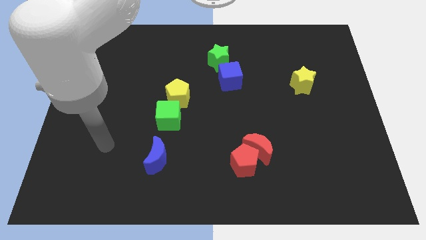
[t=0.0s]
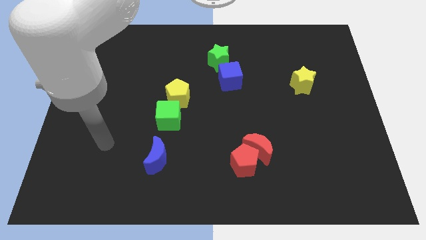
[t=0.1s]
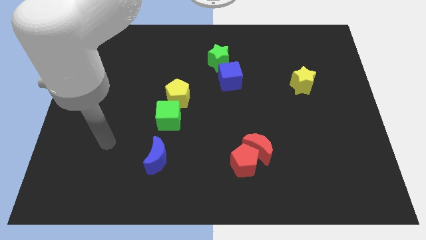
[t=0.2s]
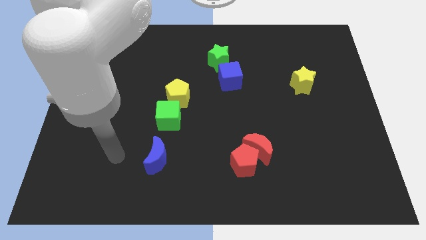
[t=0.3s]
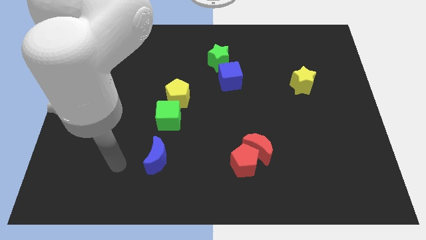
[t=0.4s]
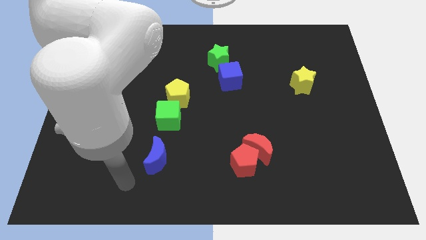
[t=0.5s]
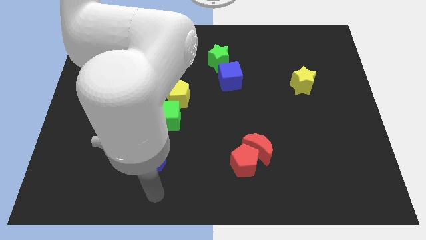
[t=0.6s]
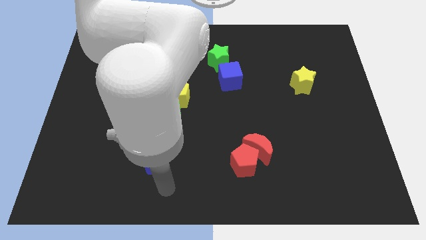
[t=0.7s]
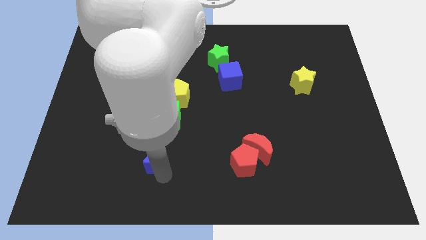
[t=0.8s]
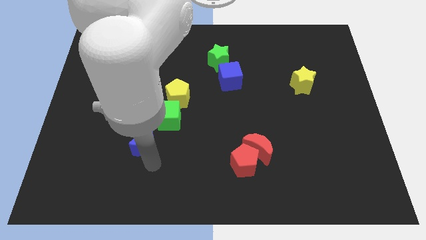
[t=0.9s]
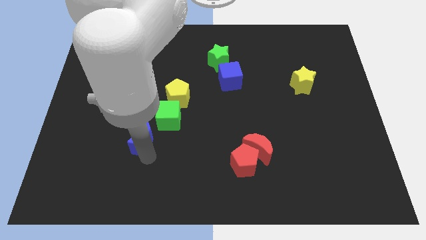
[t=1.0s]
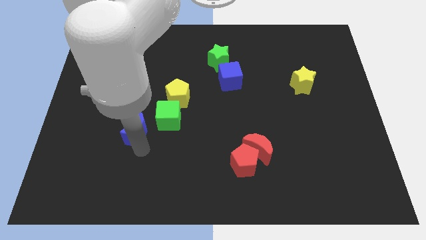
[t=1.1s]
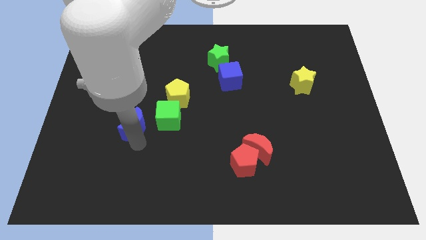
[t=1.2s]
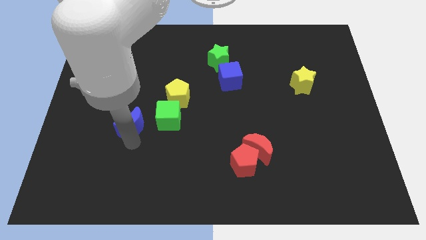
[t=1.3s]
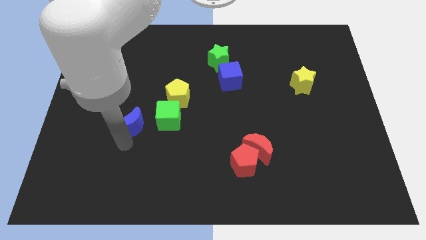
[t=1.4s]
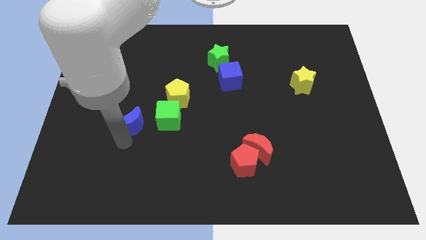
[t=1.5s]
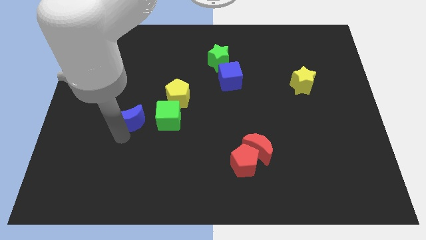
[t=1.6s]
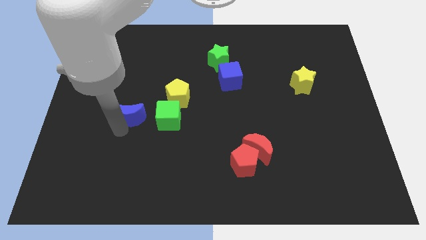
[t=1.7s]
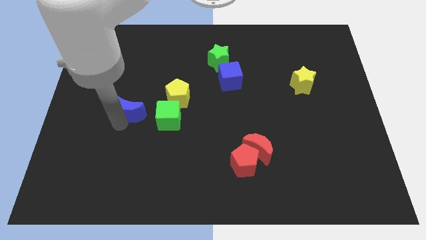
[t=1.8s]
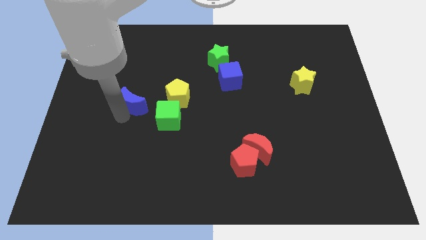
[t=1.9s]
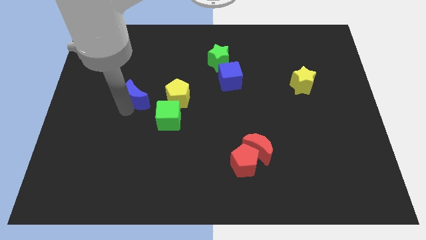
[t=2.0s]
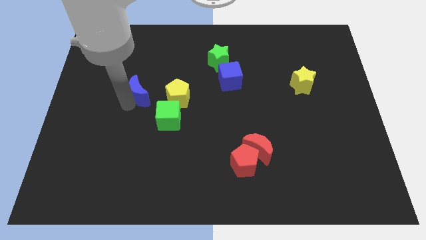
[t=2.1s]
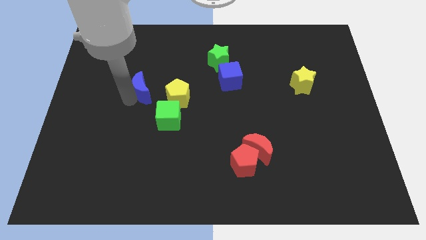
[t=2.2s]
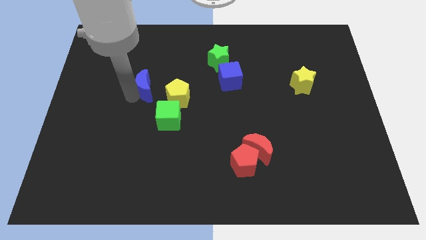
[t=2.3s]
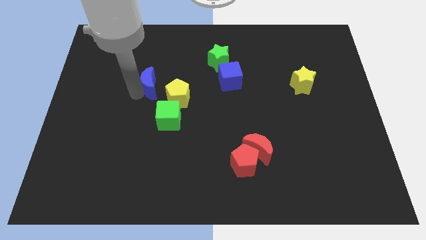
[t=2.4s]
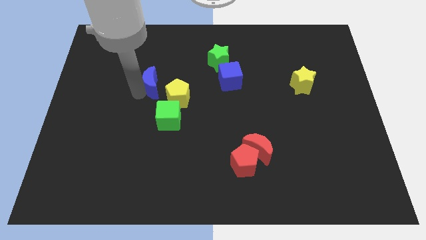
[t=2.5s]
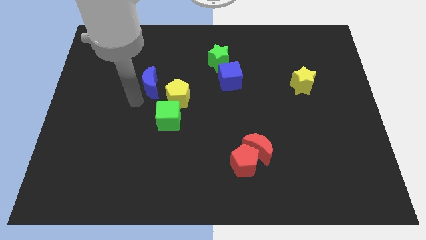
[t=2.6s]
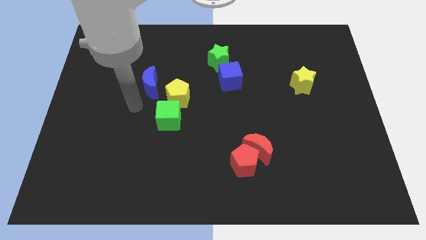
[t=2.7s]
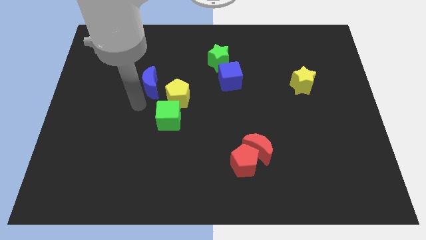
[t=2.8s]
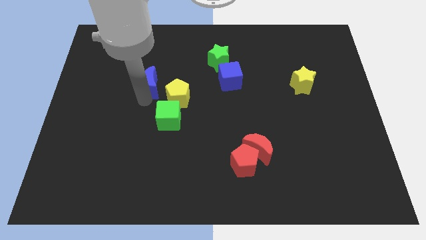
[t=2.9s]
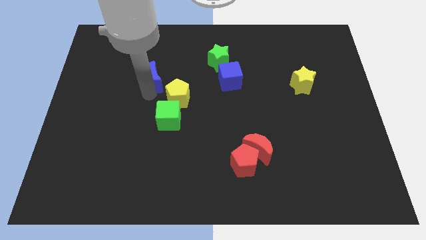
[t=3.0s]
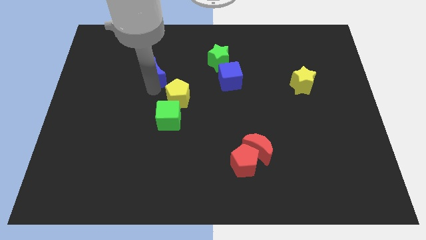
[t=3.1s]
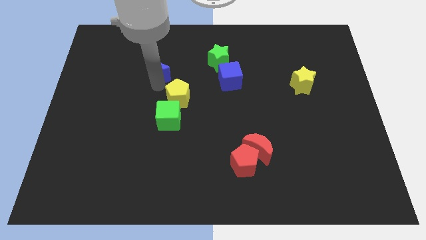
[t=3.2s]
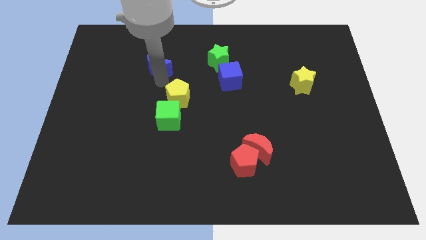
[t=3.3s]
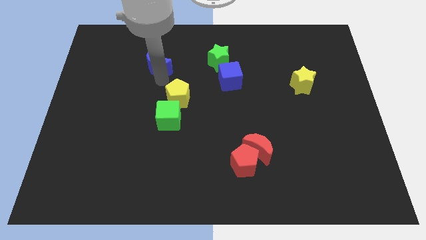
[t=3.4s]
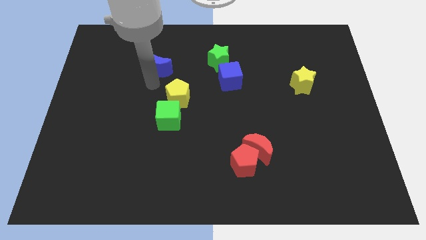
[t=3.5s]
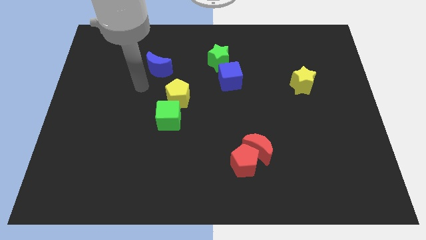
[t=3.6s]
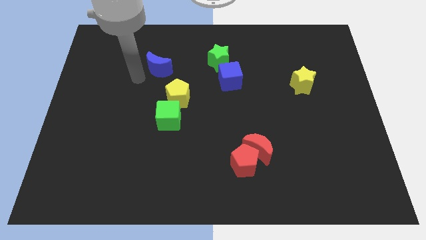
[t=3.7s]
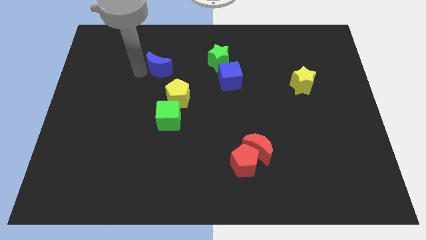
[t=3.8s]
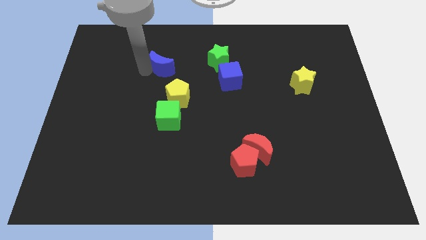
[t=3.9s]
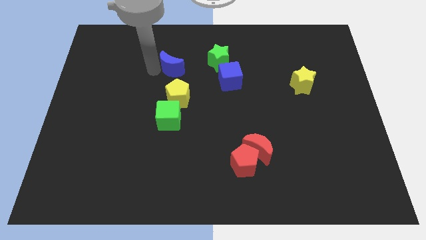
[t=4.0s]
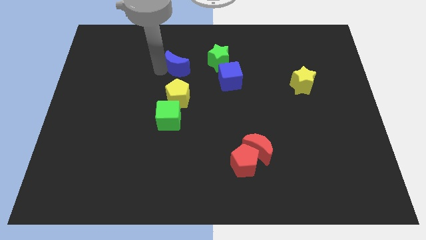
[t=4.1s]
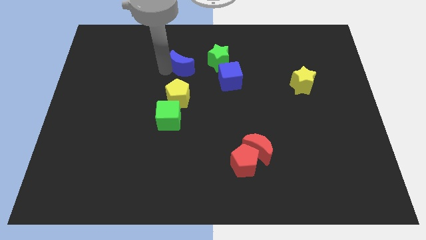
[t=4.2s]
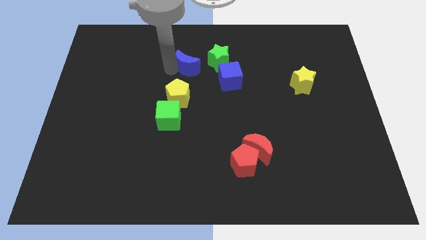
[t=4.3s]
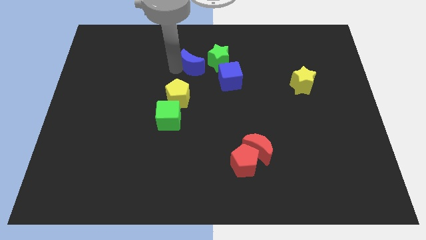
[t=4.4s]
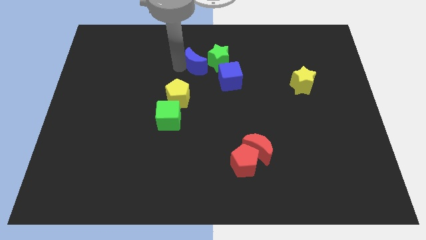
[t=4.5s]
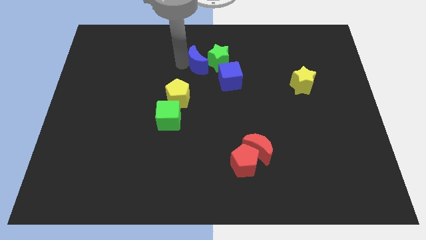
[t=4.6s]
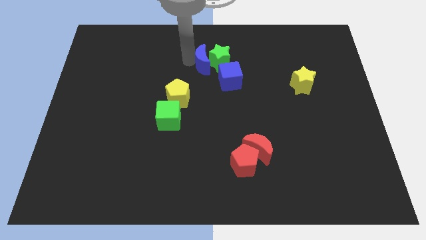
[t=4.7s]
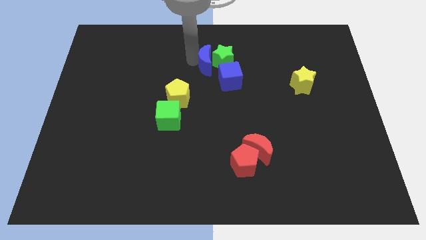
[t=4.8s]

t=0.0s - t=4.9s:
put the blue moon next to the green star

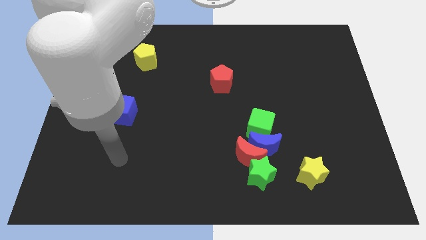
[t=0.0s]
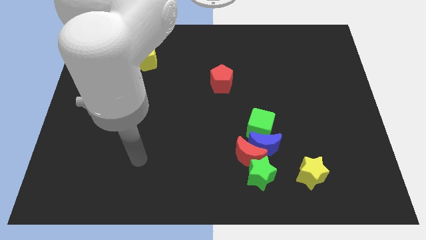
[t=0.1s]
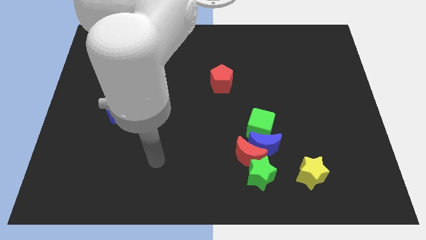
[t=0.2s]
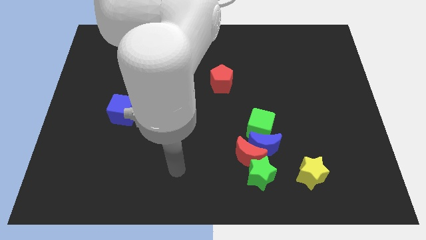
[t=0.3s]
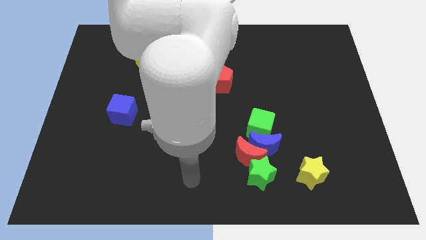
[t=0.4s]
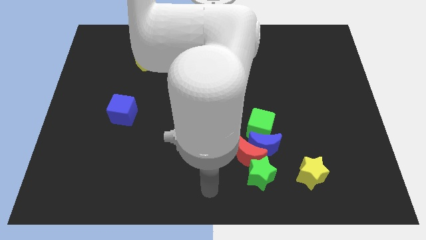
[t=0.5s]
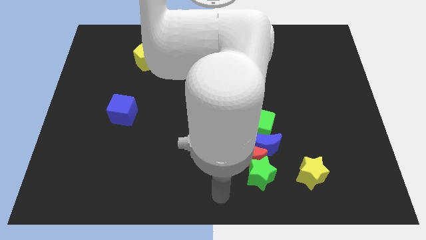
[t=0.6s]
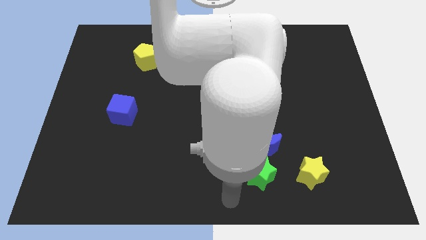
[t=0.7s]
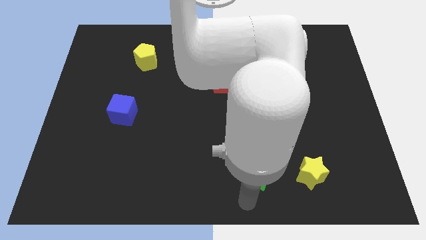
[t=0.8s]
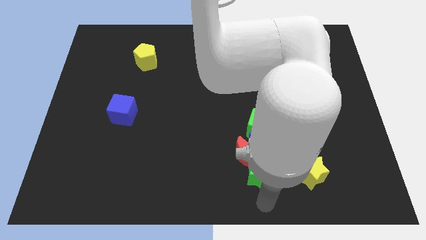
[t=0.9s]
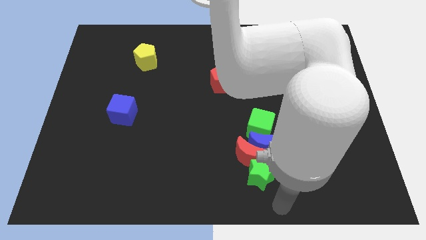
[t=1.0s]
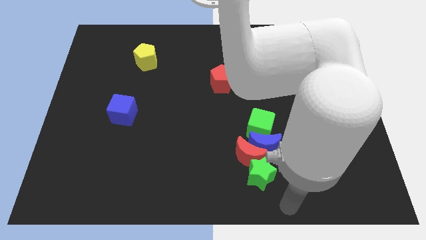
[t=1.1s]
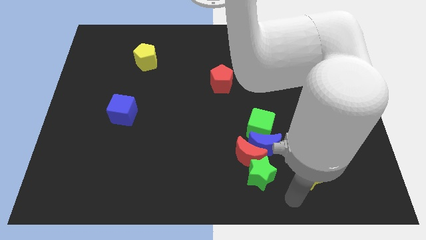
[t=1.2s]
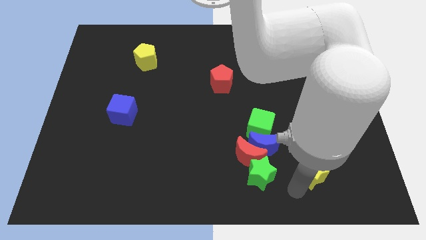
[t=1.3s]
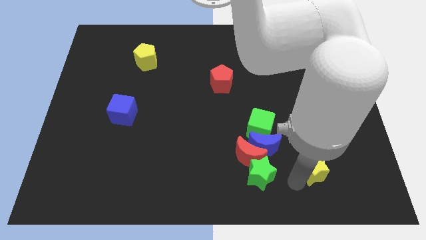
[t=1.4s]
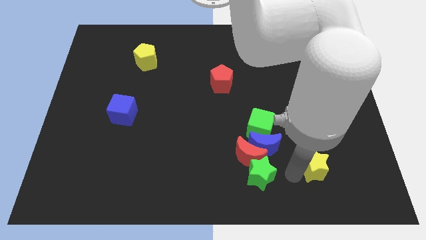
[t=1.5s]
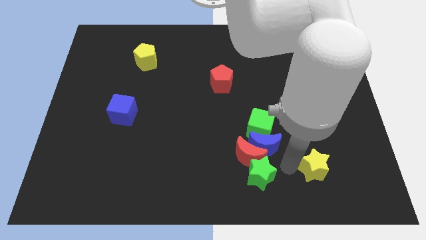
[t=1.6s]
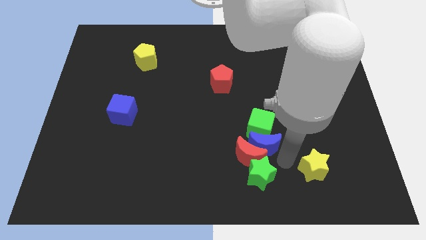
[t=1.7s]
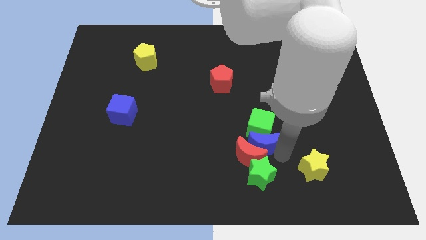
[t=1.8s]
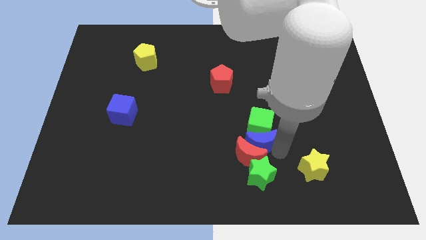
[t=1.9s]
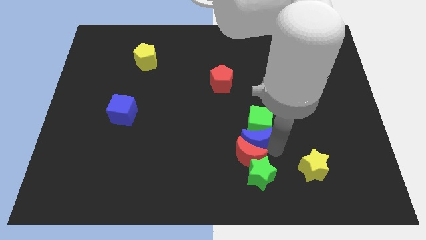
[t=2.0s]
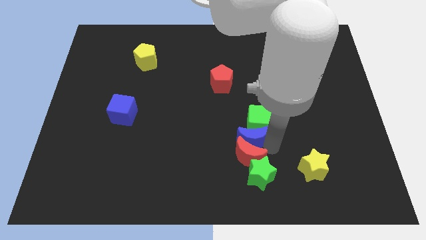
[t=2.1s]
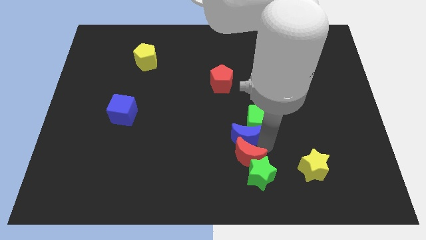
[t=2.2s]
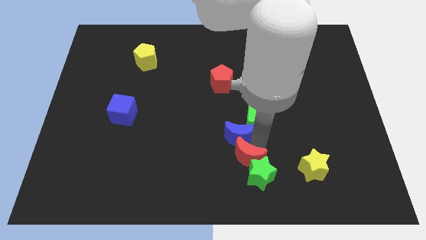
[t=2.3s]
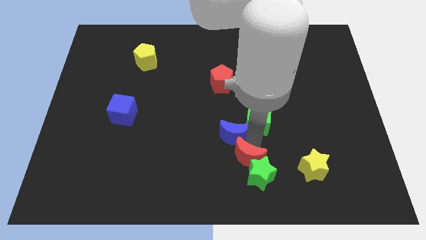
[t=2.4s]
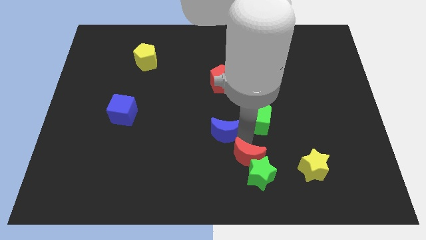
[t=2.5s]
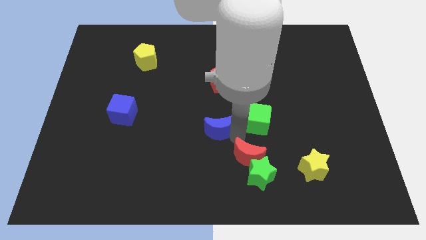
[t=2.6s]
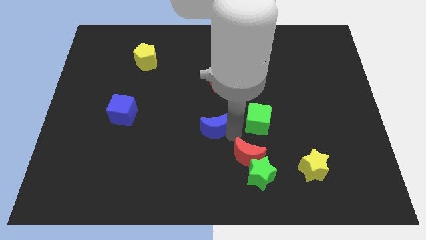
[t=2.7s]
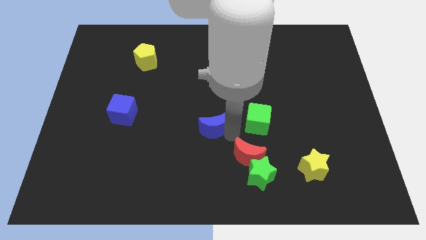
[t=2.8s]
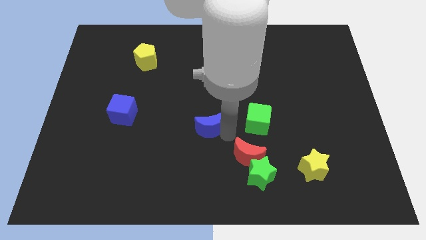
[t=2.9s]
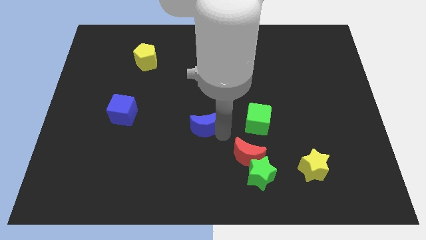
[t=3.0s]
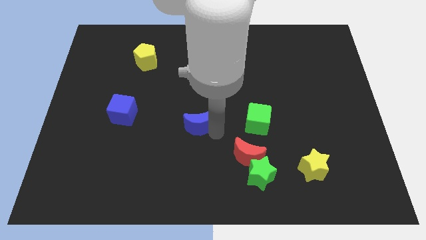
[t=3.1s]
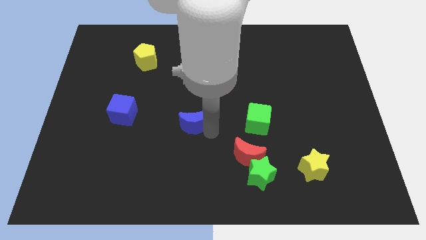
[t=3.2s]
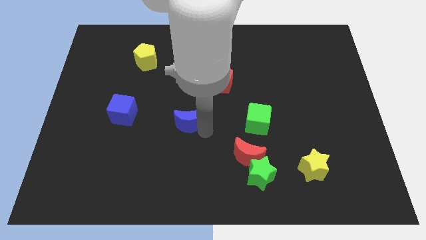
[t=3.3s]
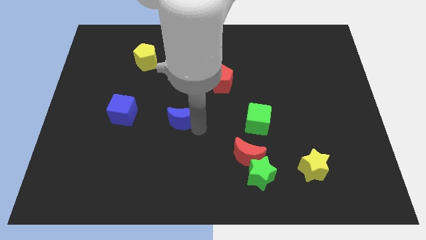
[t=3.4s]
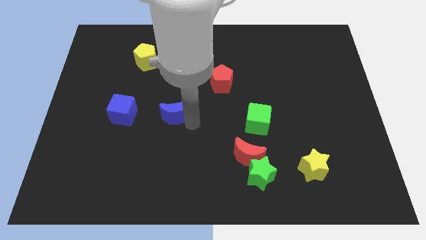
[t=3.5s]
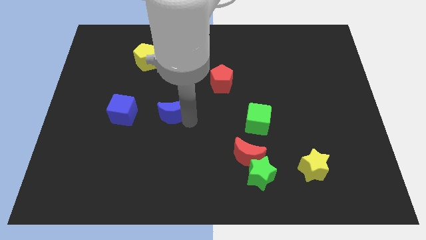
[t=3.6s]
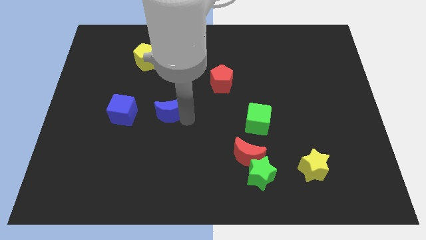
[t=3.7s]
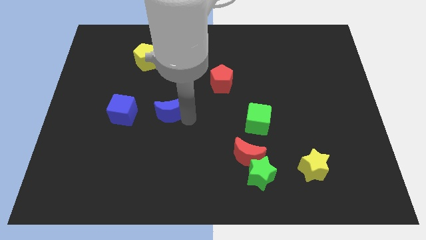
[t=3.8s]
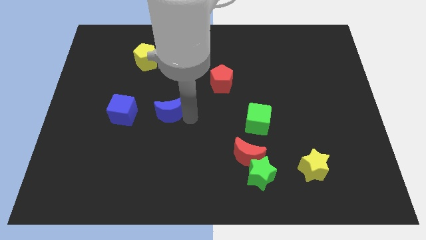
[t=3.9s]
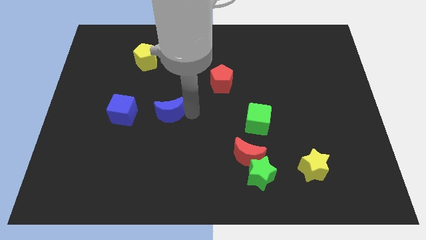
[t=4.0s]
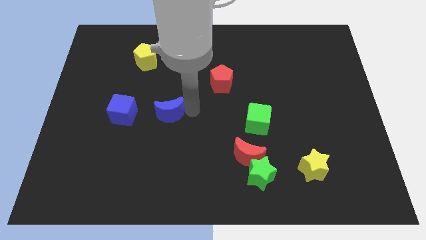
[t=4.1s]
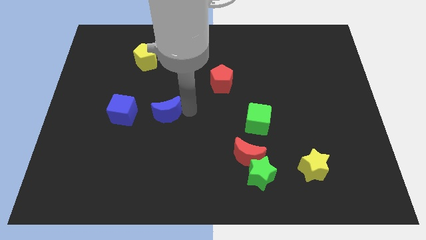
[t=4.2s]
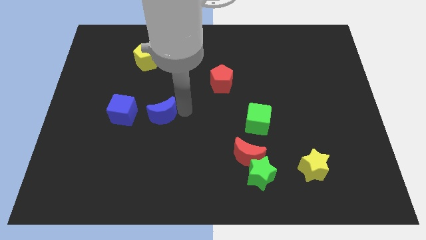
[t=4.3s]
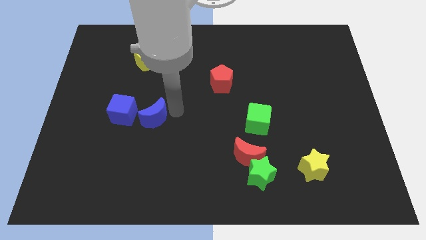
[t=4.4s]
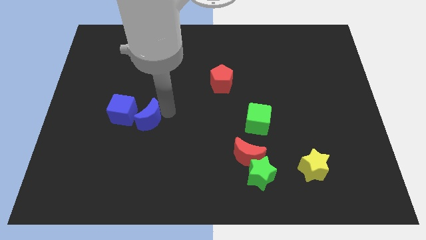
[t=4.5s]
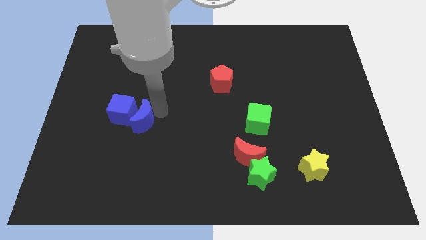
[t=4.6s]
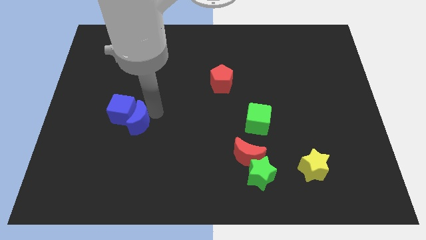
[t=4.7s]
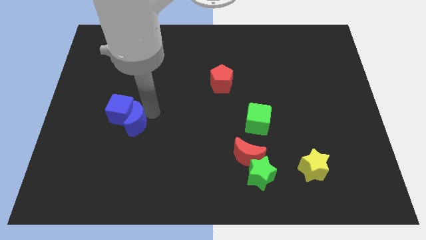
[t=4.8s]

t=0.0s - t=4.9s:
push the blue moon next to the blue cube
